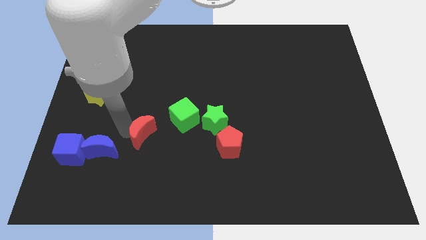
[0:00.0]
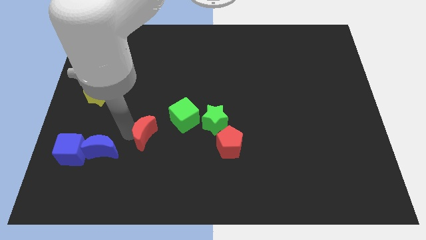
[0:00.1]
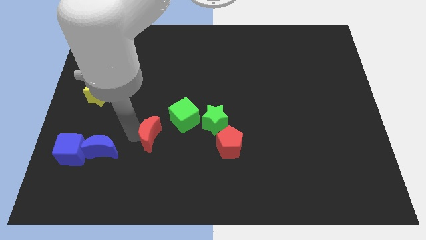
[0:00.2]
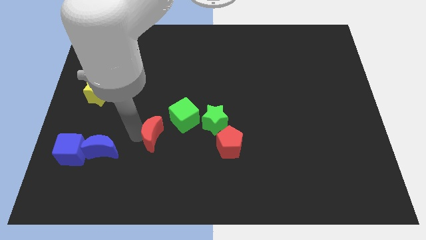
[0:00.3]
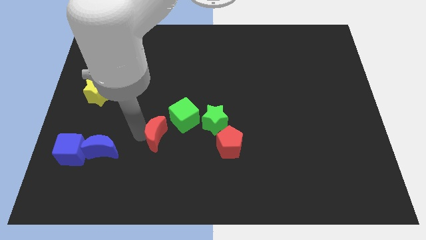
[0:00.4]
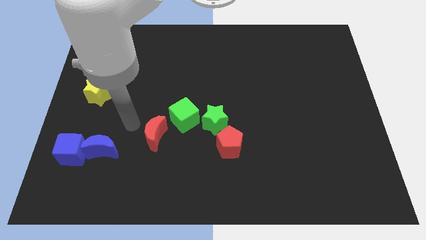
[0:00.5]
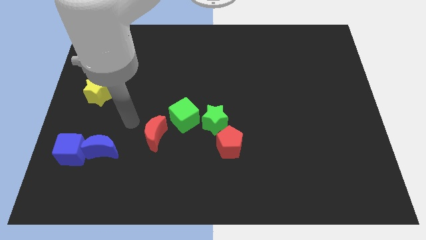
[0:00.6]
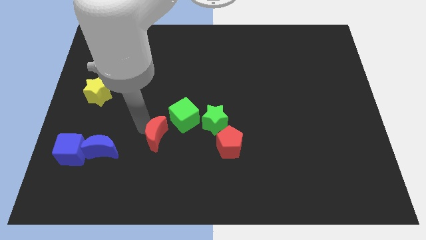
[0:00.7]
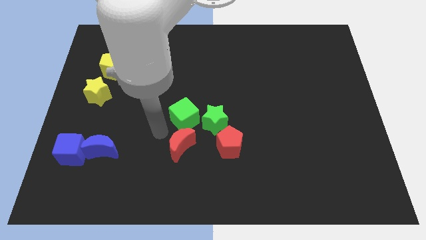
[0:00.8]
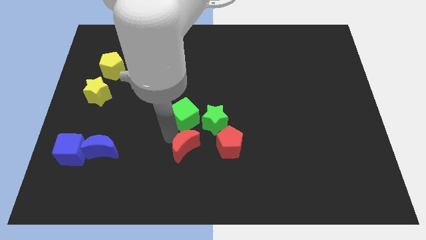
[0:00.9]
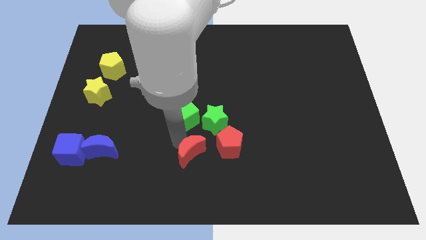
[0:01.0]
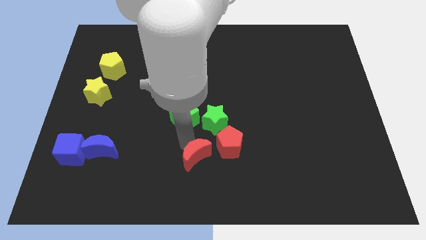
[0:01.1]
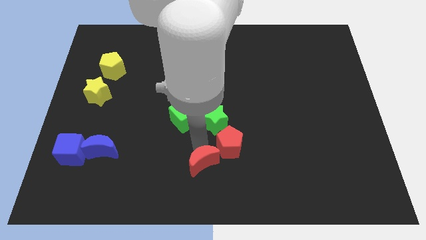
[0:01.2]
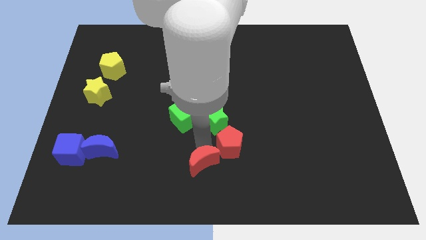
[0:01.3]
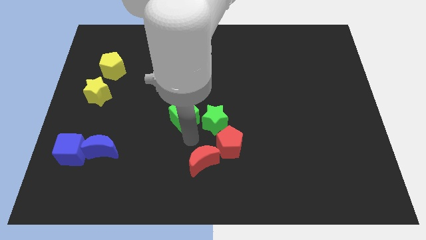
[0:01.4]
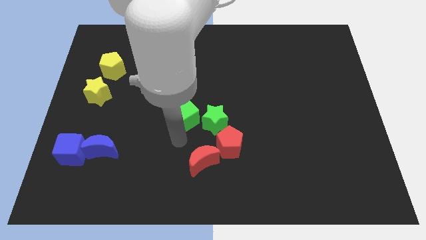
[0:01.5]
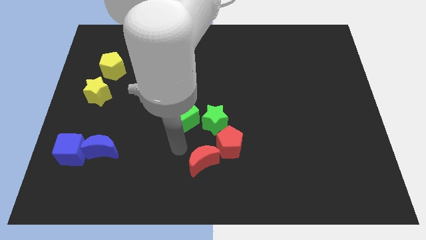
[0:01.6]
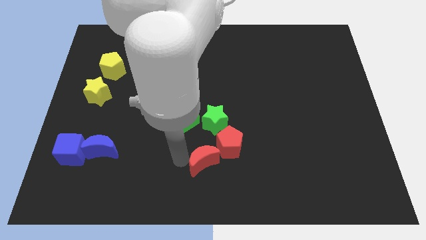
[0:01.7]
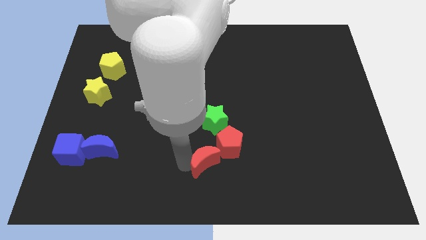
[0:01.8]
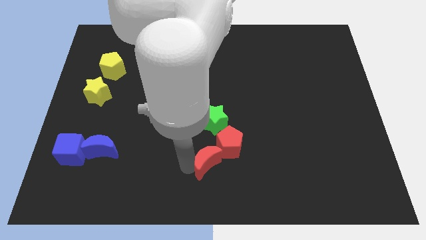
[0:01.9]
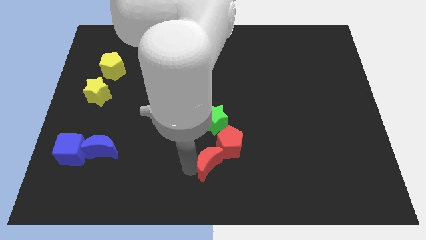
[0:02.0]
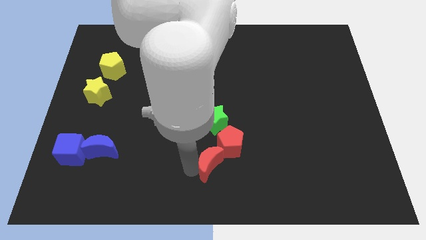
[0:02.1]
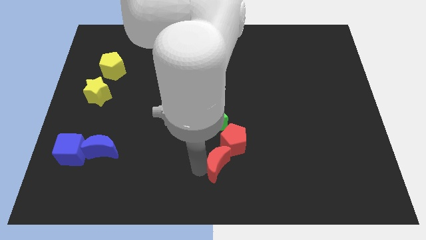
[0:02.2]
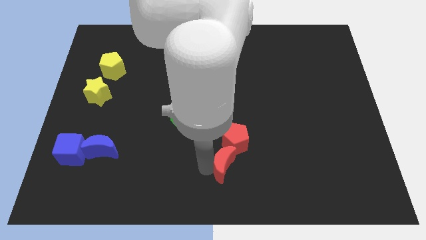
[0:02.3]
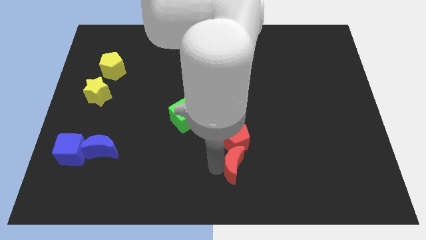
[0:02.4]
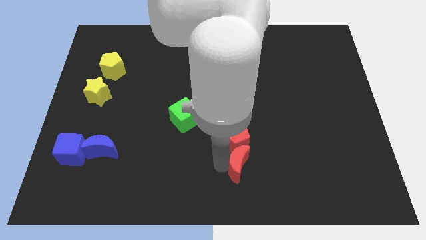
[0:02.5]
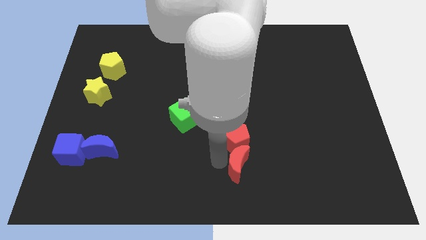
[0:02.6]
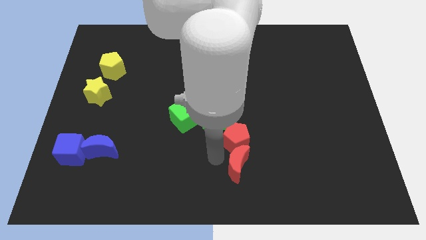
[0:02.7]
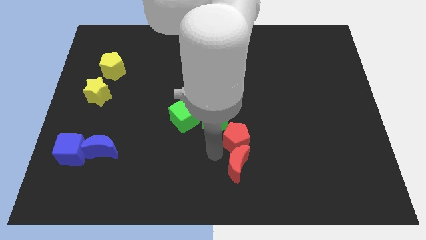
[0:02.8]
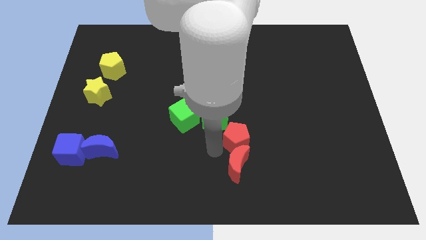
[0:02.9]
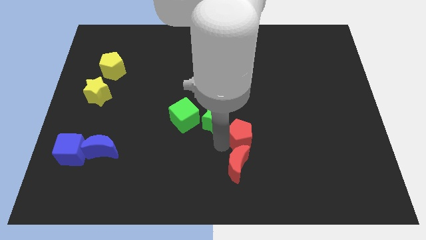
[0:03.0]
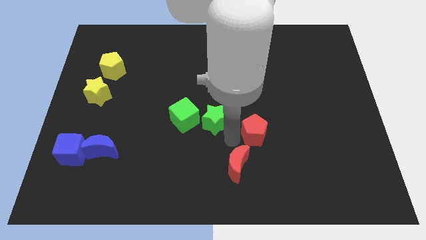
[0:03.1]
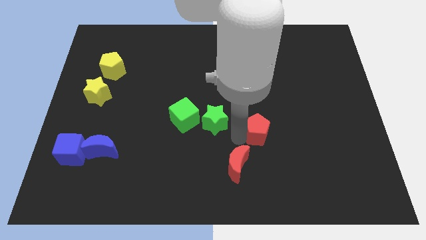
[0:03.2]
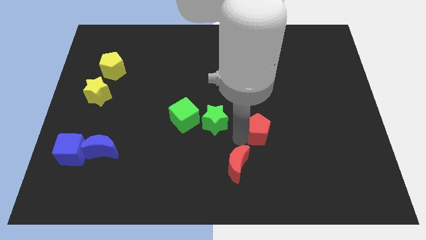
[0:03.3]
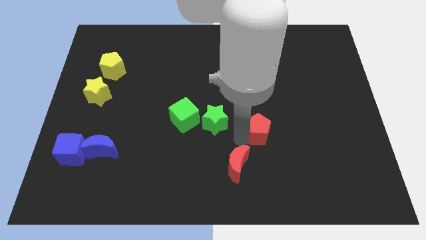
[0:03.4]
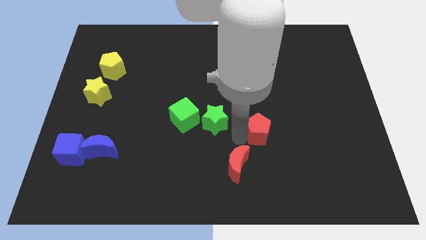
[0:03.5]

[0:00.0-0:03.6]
place the red moon diagonally to the bottom left of the red pentagon

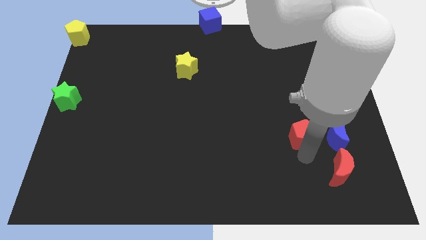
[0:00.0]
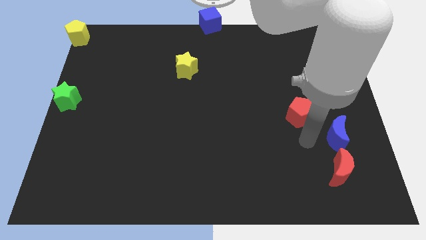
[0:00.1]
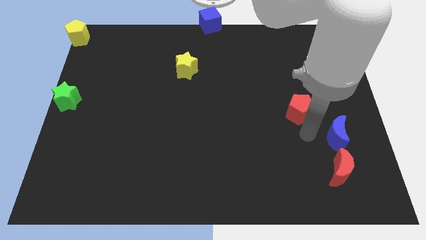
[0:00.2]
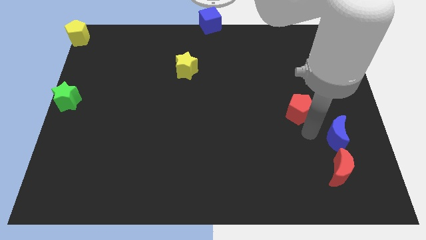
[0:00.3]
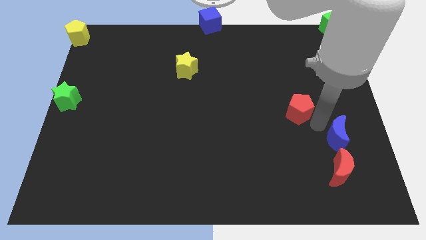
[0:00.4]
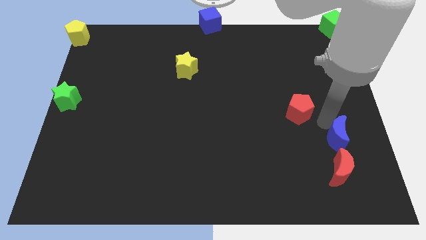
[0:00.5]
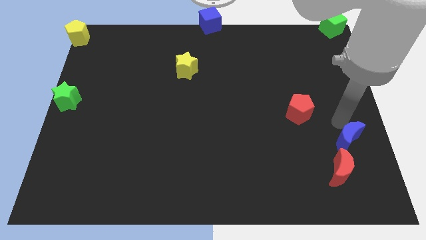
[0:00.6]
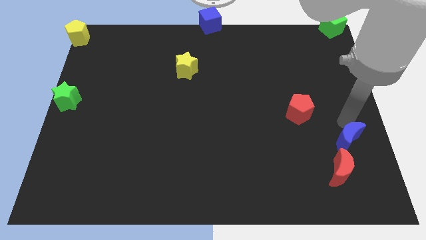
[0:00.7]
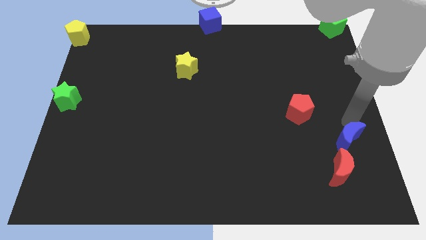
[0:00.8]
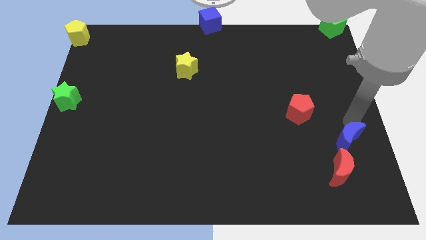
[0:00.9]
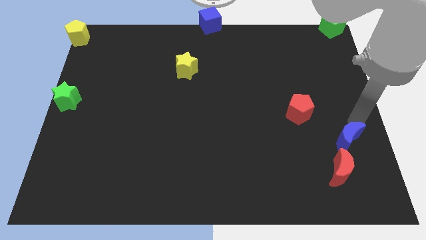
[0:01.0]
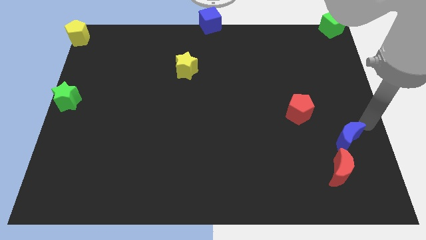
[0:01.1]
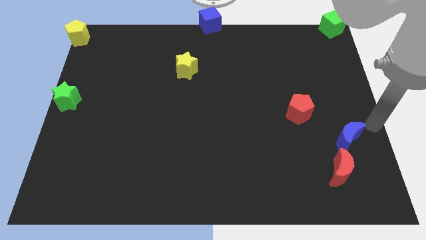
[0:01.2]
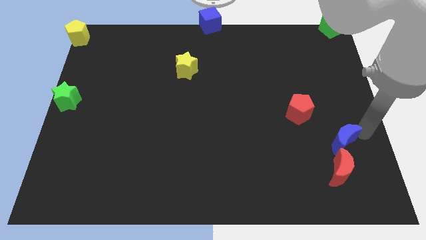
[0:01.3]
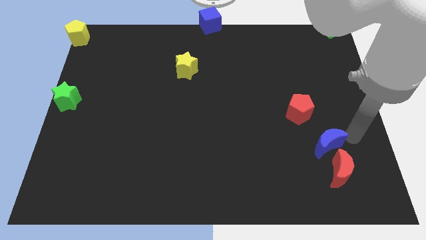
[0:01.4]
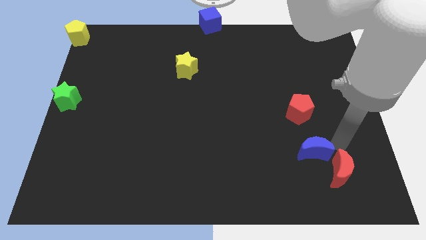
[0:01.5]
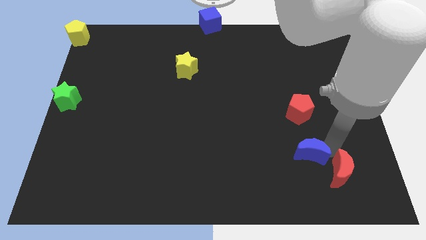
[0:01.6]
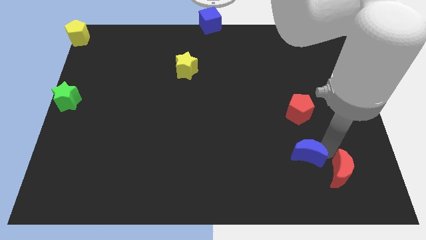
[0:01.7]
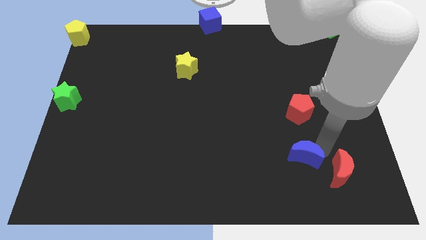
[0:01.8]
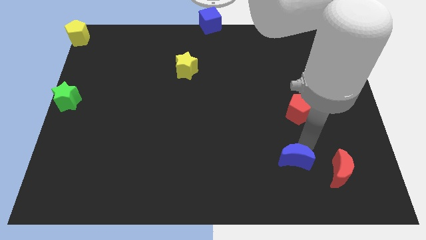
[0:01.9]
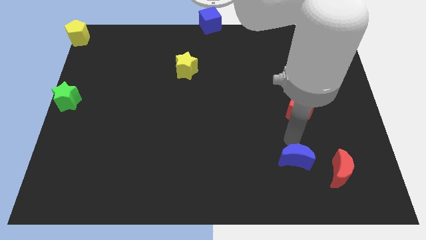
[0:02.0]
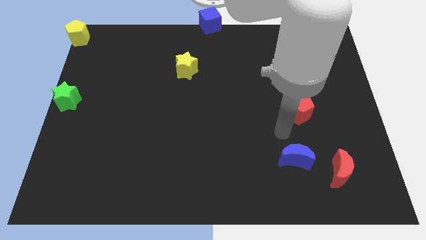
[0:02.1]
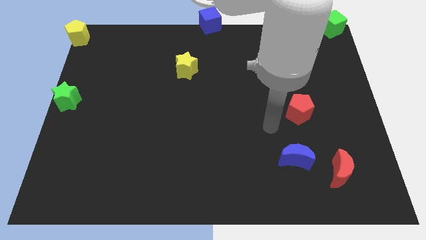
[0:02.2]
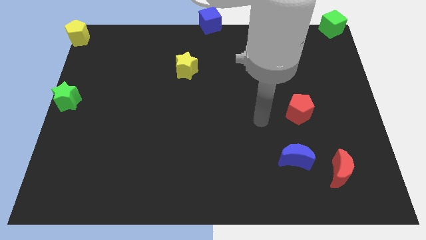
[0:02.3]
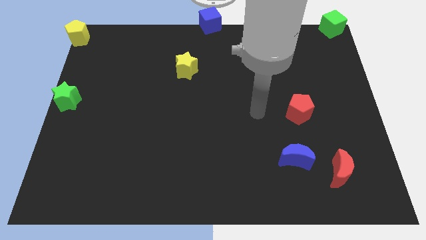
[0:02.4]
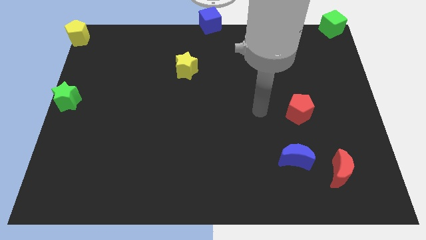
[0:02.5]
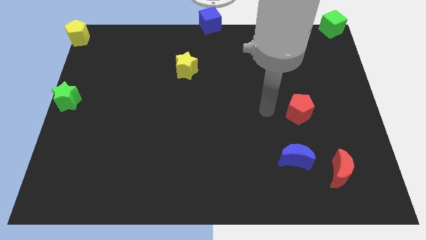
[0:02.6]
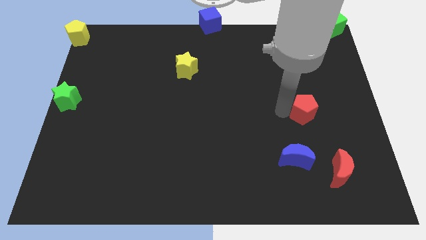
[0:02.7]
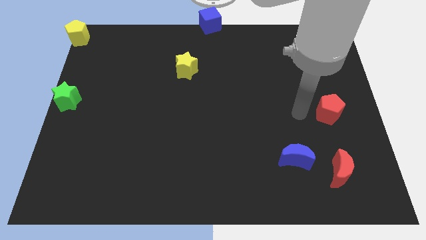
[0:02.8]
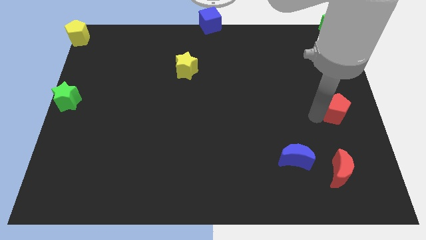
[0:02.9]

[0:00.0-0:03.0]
push red pentagon to the right center of the board

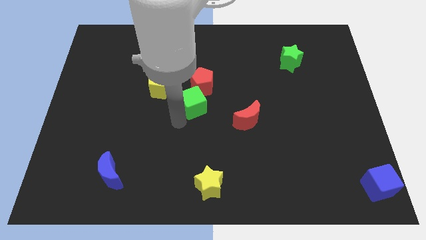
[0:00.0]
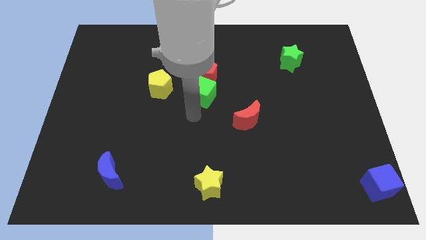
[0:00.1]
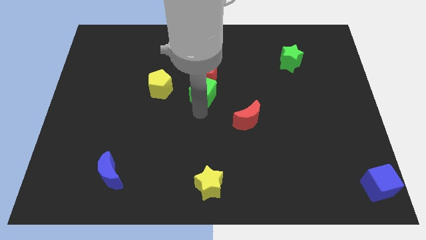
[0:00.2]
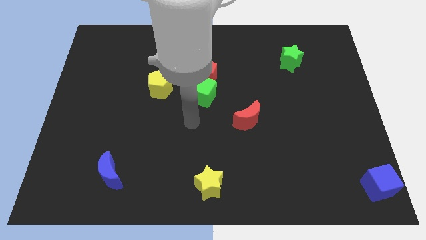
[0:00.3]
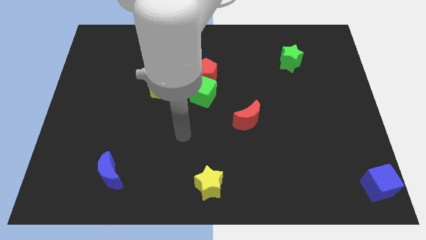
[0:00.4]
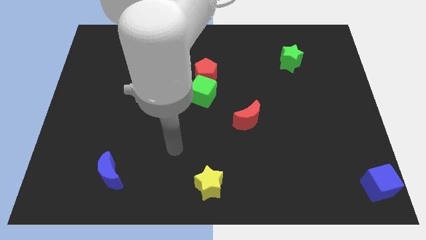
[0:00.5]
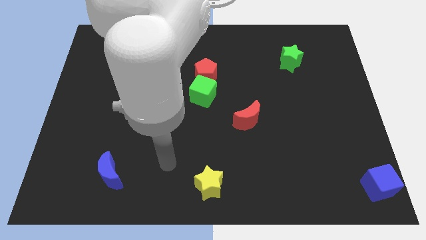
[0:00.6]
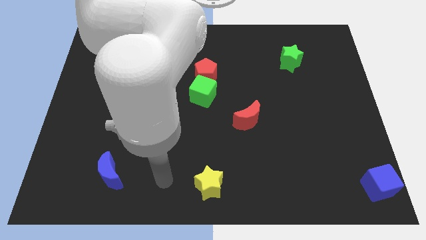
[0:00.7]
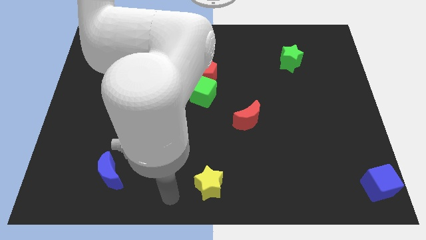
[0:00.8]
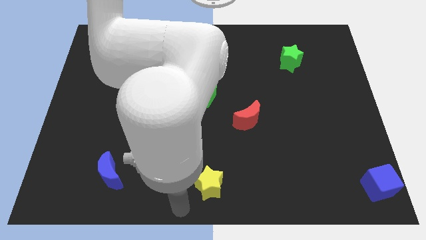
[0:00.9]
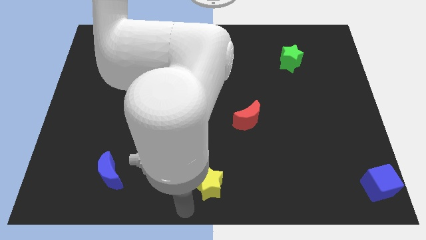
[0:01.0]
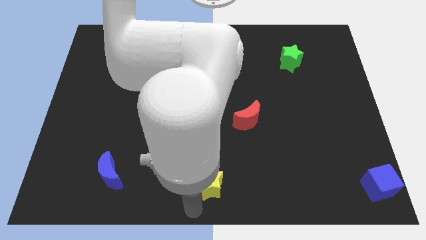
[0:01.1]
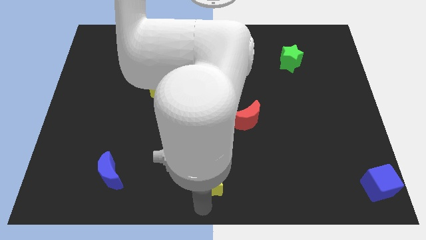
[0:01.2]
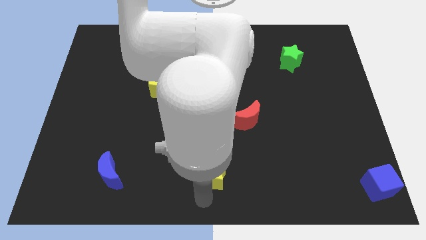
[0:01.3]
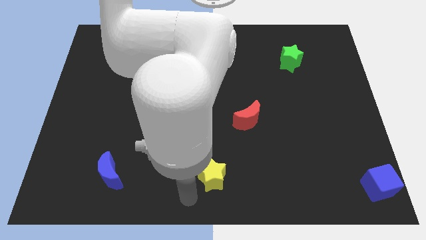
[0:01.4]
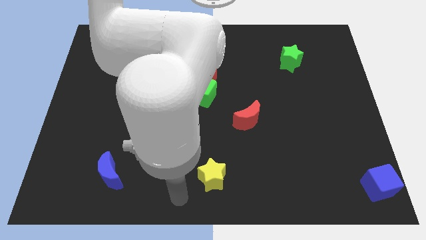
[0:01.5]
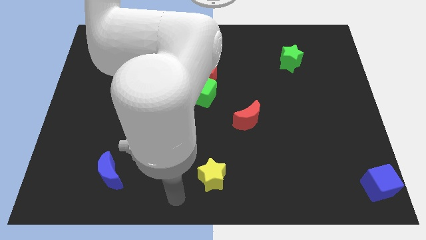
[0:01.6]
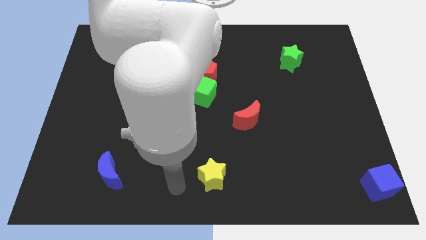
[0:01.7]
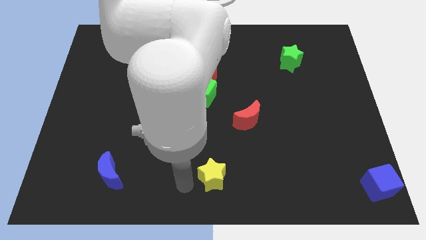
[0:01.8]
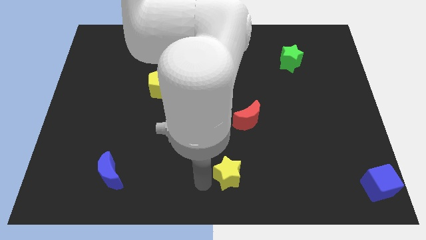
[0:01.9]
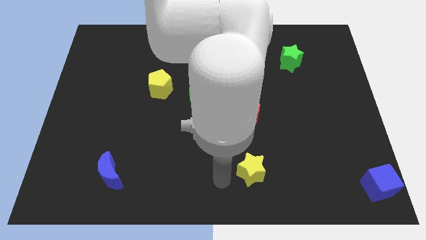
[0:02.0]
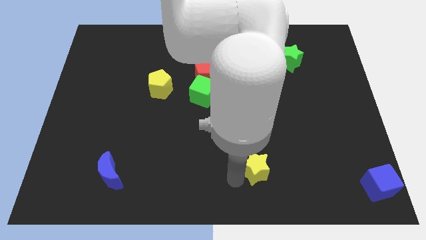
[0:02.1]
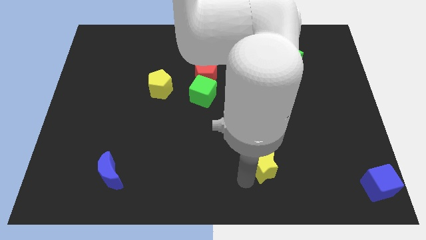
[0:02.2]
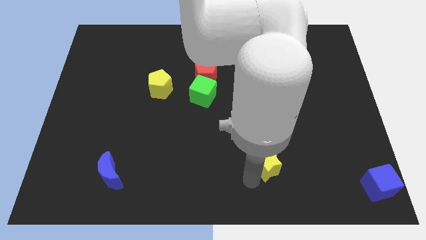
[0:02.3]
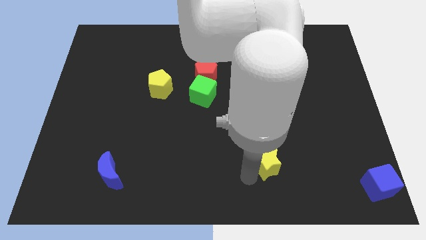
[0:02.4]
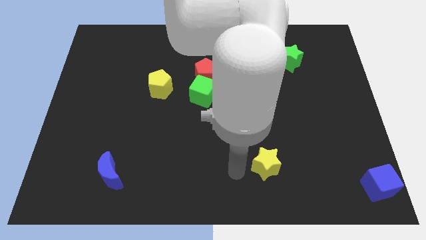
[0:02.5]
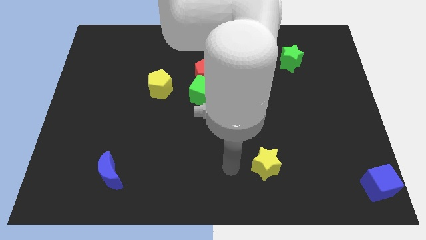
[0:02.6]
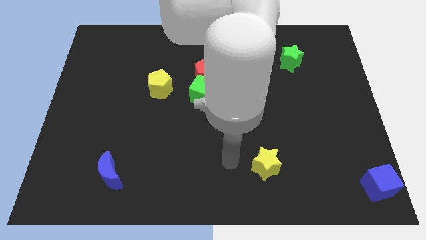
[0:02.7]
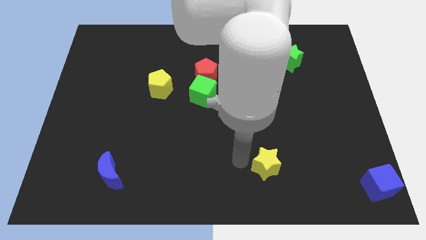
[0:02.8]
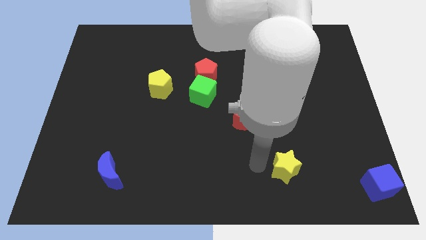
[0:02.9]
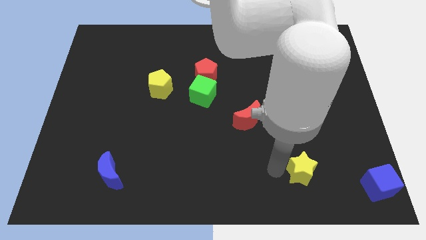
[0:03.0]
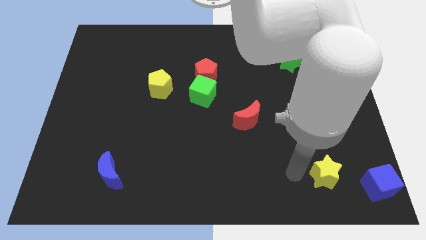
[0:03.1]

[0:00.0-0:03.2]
push the yellow star towards the left side of the blue cube
